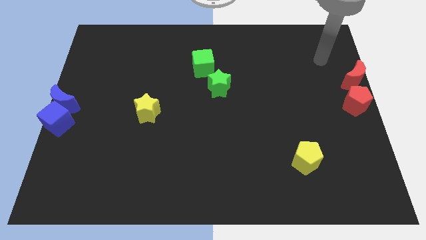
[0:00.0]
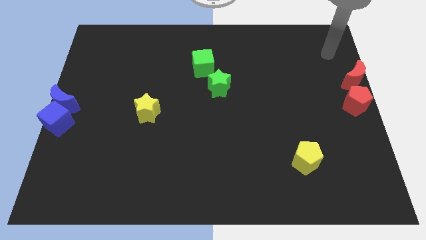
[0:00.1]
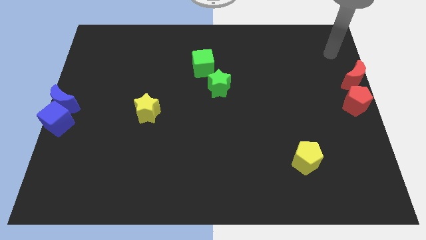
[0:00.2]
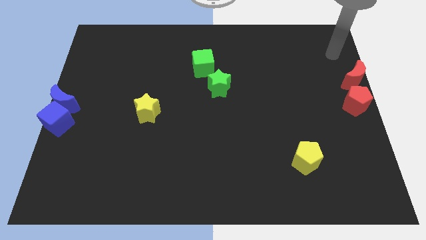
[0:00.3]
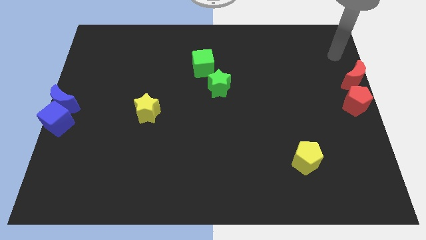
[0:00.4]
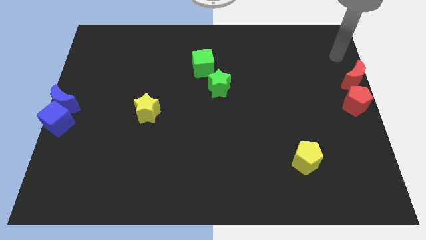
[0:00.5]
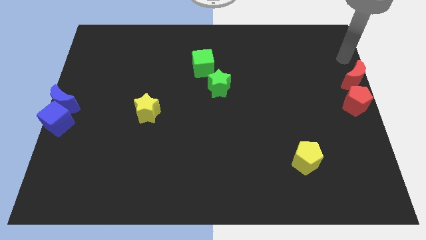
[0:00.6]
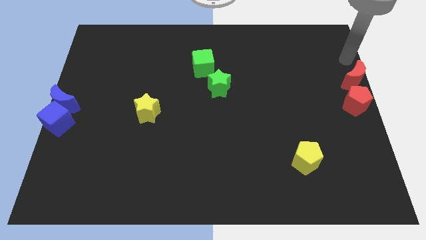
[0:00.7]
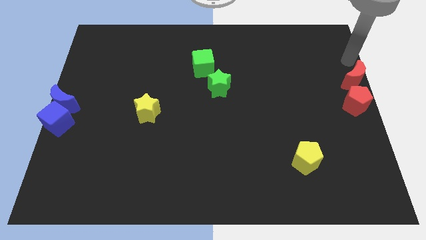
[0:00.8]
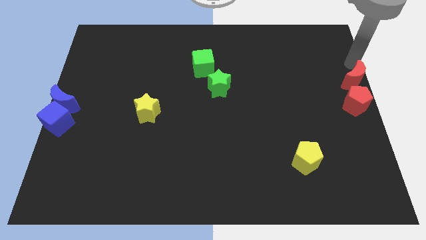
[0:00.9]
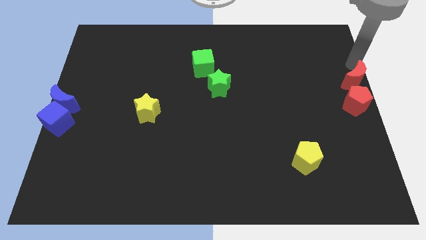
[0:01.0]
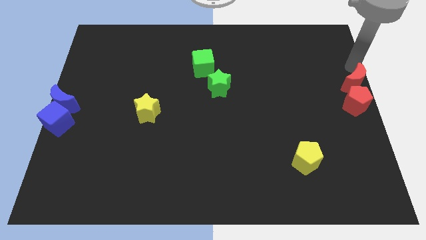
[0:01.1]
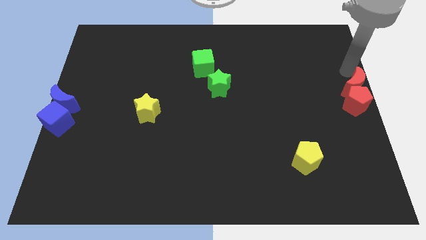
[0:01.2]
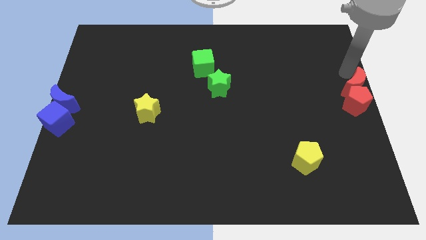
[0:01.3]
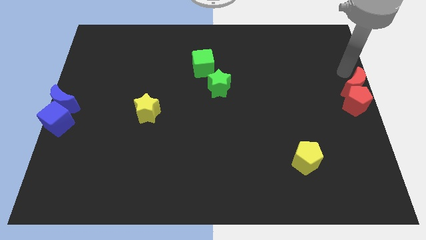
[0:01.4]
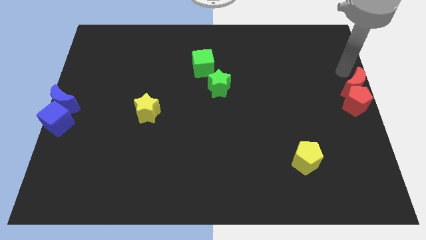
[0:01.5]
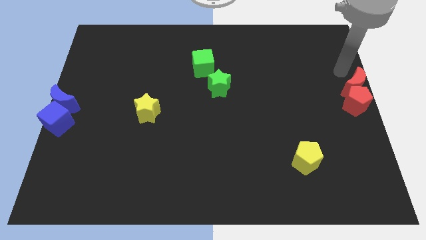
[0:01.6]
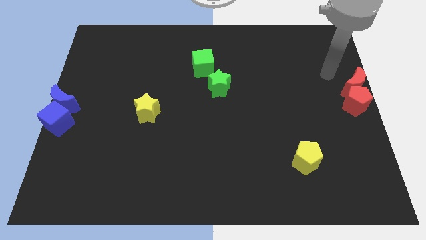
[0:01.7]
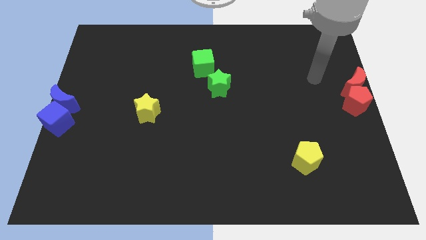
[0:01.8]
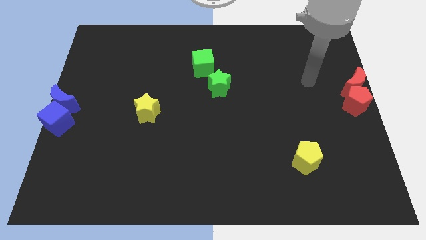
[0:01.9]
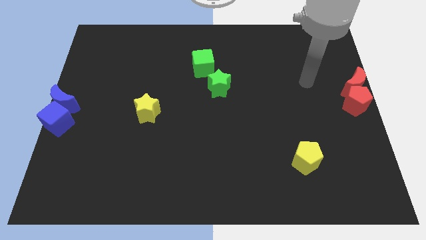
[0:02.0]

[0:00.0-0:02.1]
push the red moon into the red pentagon

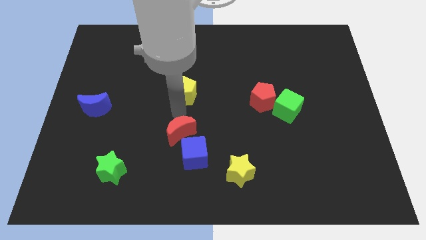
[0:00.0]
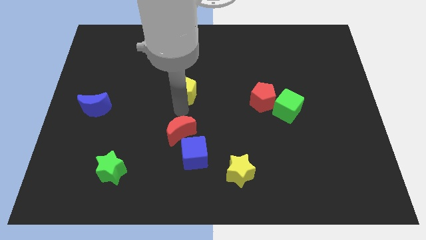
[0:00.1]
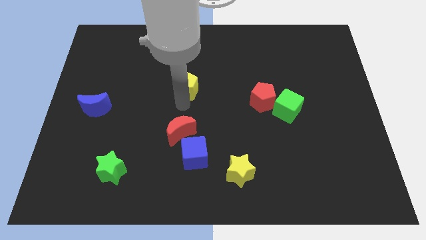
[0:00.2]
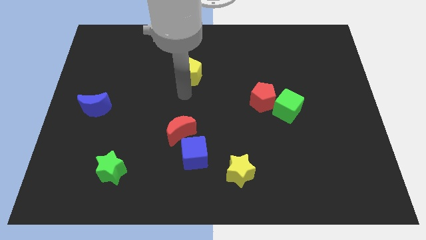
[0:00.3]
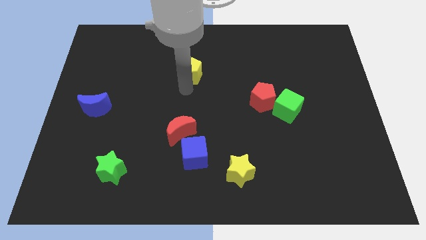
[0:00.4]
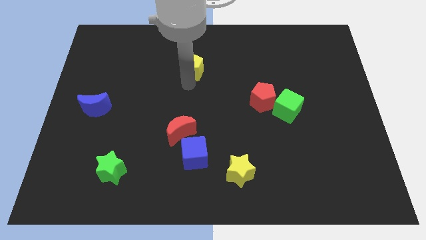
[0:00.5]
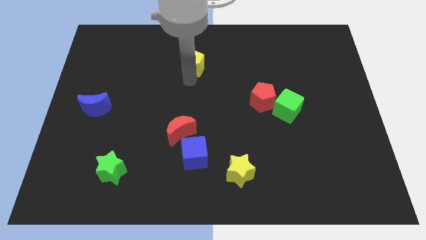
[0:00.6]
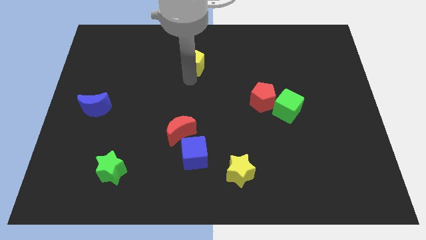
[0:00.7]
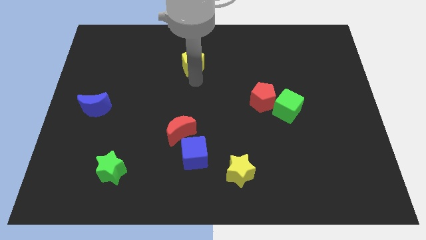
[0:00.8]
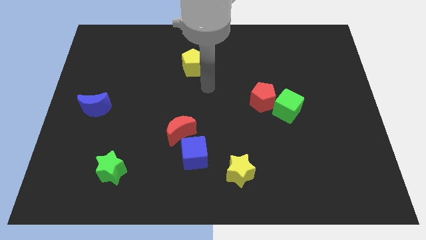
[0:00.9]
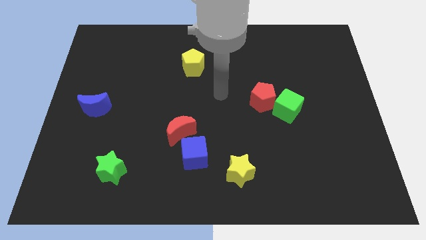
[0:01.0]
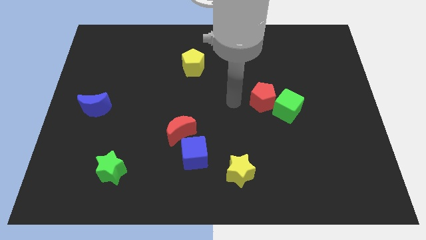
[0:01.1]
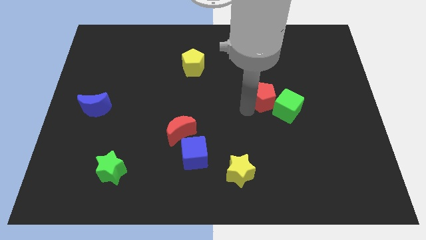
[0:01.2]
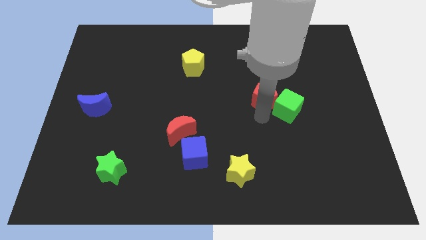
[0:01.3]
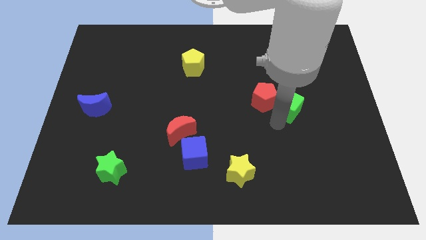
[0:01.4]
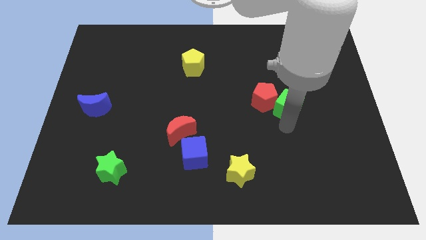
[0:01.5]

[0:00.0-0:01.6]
push the yellow pentagon diagonally on the top left side of the red pentagon

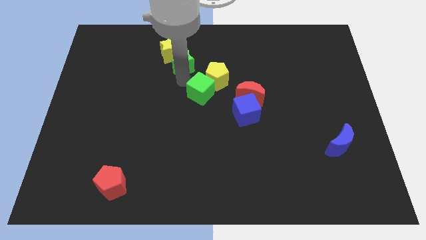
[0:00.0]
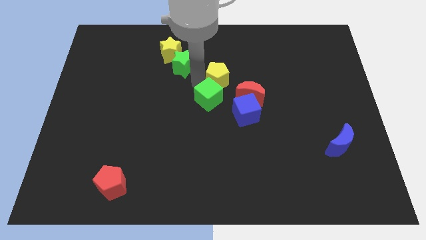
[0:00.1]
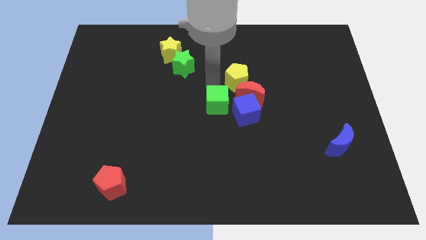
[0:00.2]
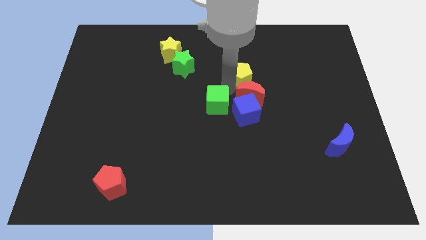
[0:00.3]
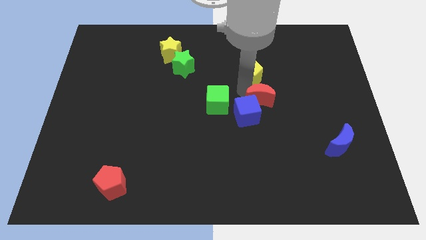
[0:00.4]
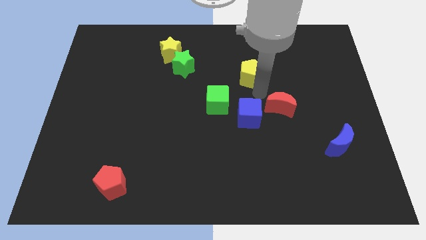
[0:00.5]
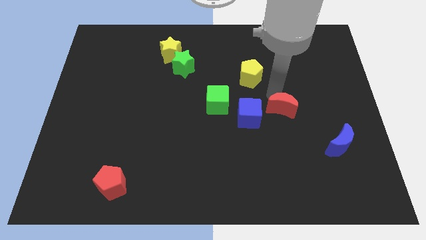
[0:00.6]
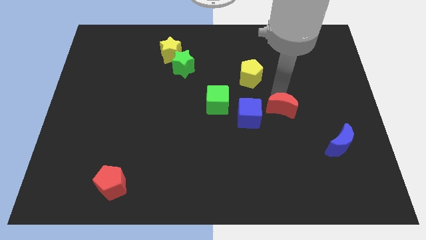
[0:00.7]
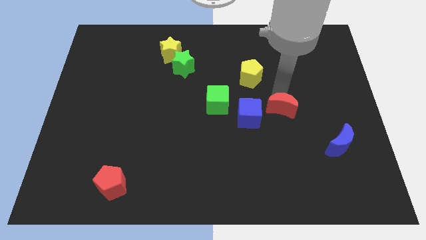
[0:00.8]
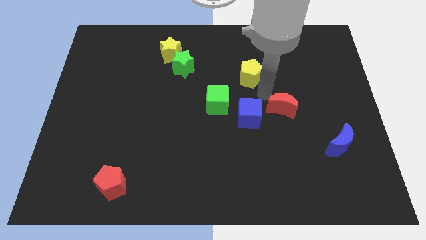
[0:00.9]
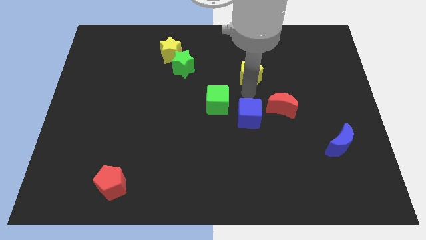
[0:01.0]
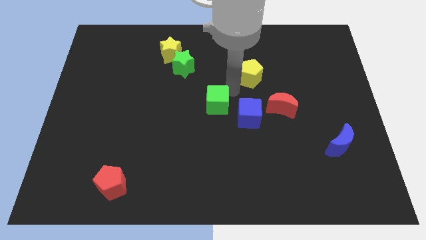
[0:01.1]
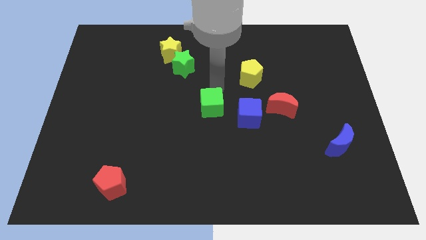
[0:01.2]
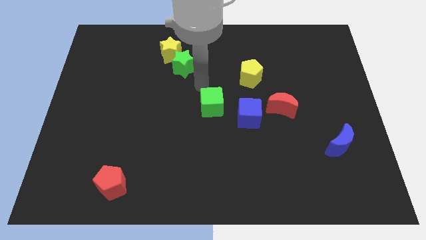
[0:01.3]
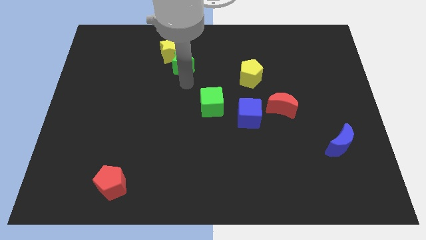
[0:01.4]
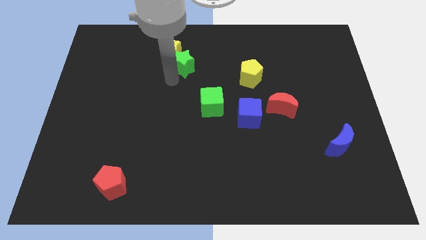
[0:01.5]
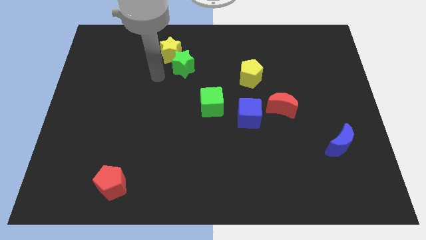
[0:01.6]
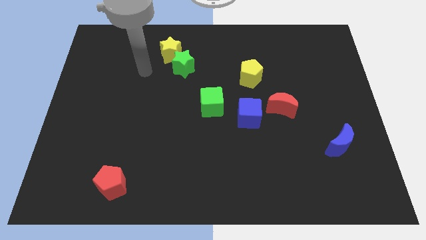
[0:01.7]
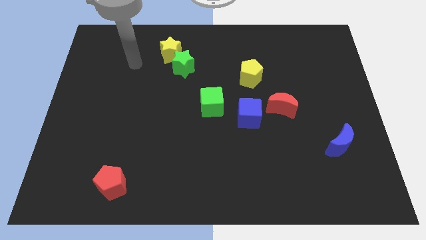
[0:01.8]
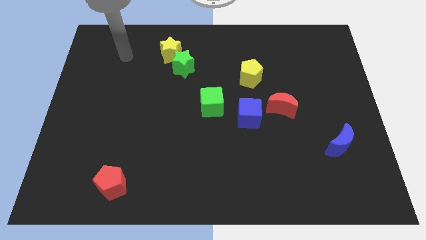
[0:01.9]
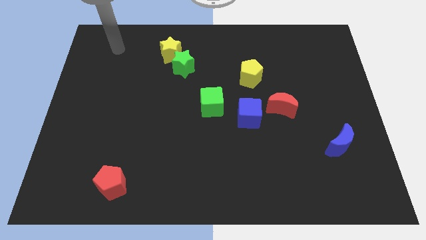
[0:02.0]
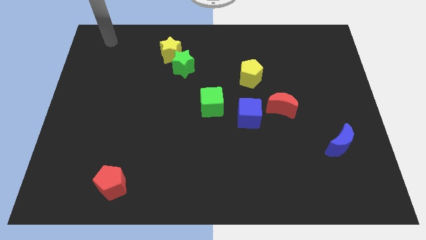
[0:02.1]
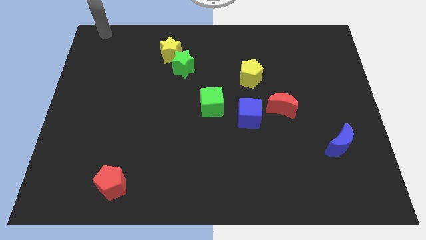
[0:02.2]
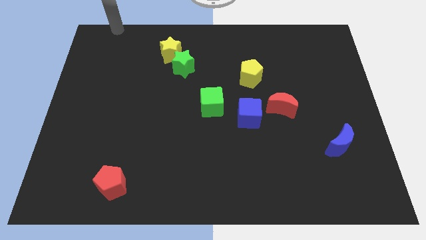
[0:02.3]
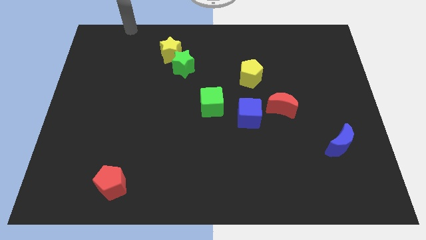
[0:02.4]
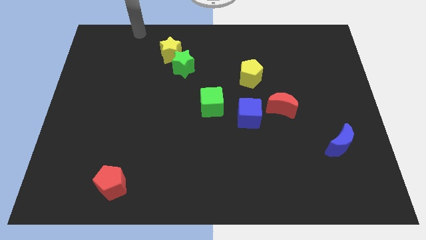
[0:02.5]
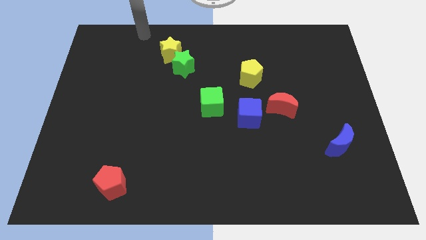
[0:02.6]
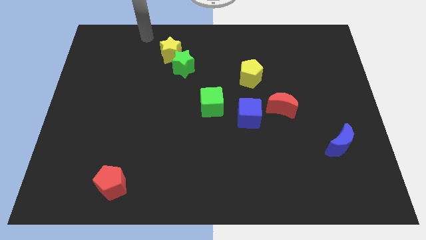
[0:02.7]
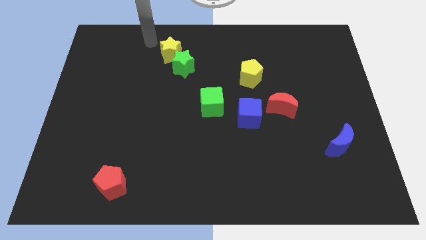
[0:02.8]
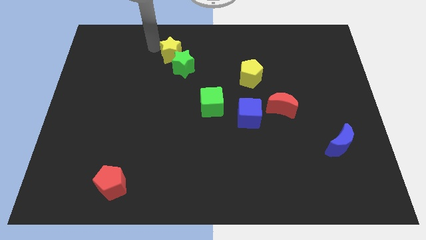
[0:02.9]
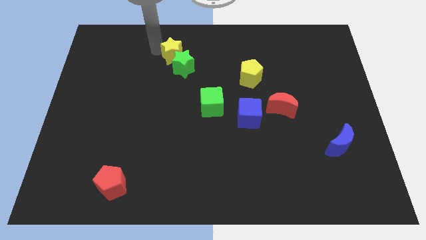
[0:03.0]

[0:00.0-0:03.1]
separate green cube and the yellow pentagon

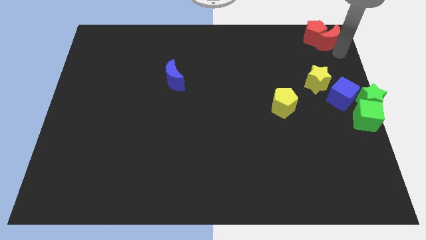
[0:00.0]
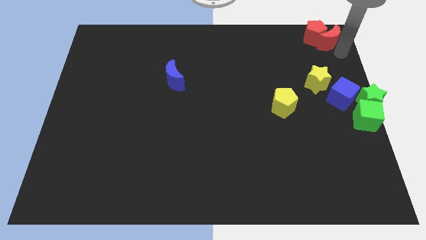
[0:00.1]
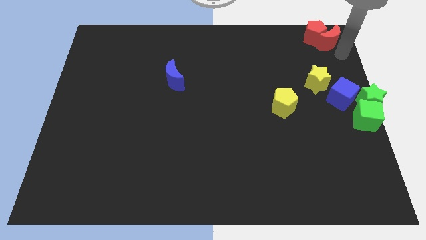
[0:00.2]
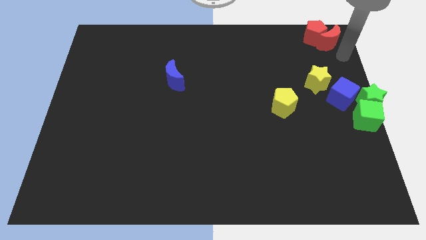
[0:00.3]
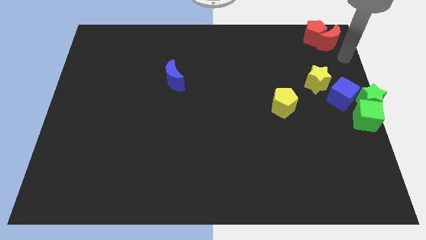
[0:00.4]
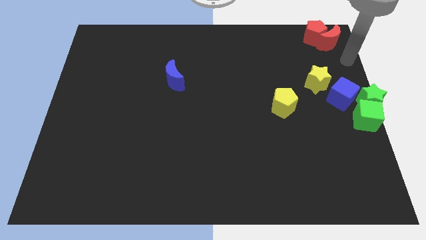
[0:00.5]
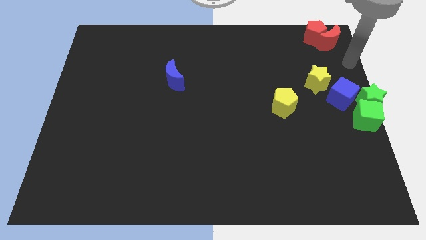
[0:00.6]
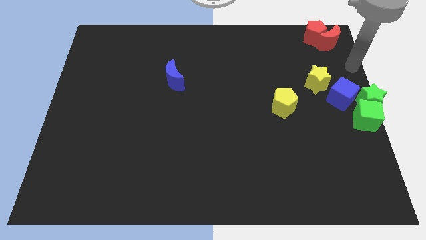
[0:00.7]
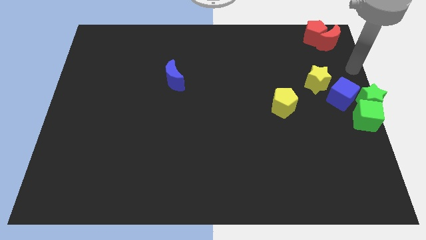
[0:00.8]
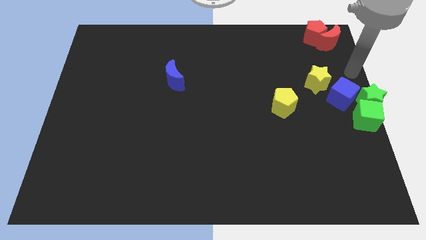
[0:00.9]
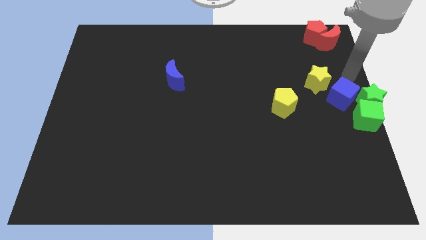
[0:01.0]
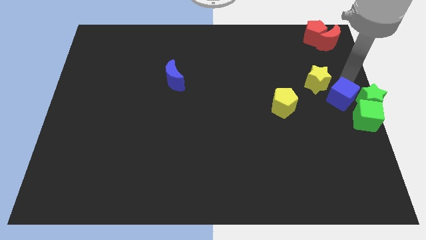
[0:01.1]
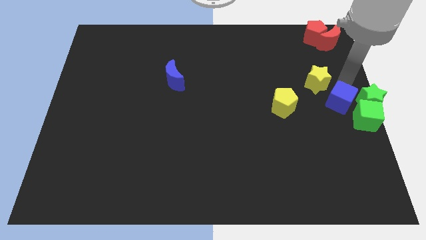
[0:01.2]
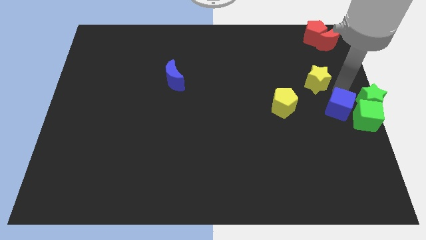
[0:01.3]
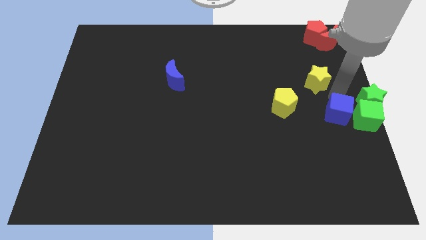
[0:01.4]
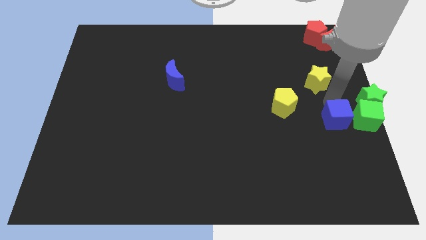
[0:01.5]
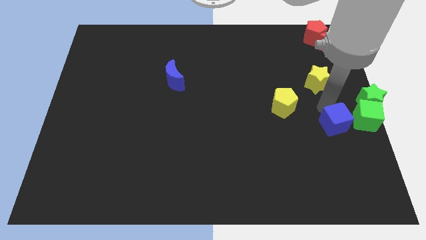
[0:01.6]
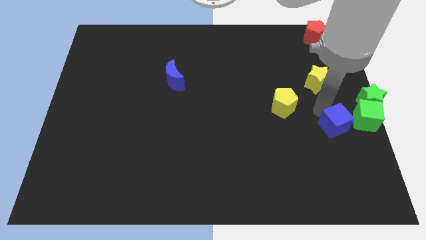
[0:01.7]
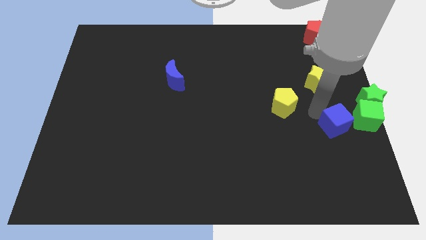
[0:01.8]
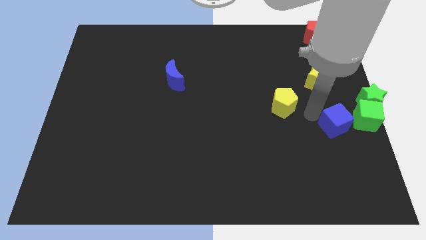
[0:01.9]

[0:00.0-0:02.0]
separate the blue cube from the green star
